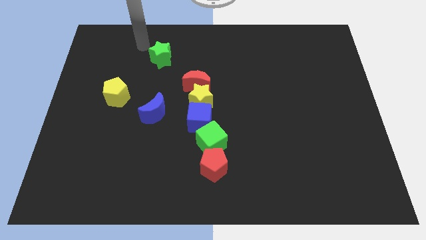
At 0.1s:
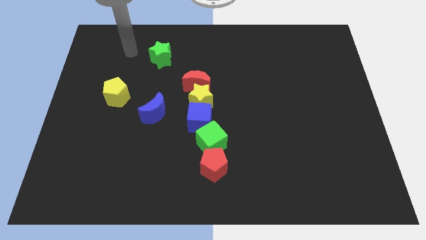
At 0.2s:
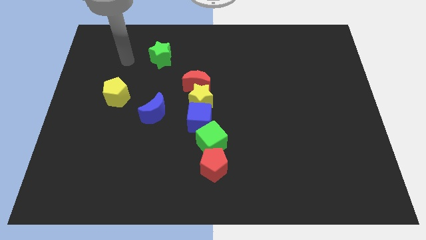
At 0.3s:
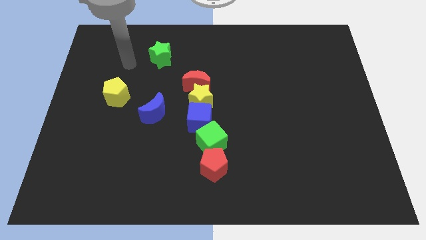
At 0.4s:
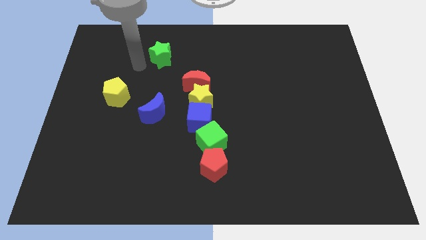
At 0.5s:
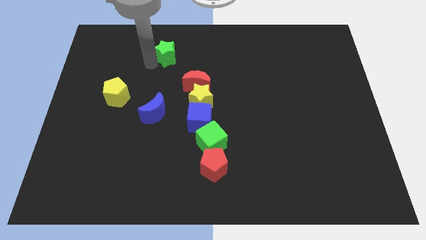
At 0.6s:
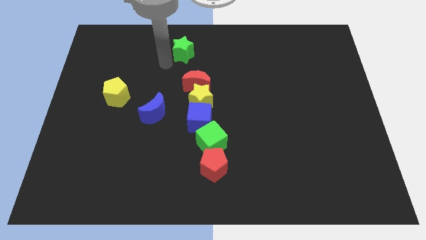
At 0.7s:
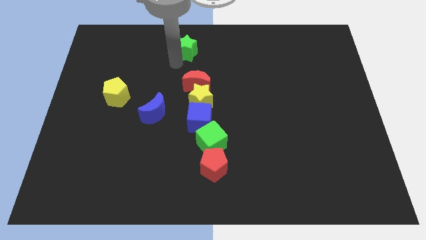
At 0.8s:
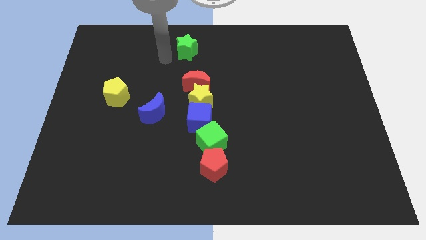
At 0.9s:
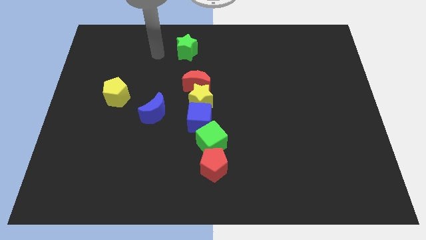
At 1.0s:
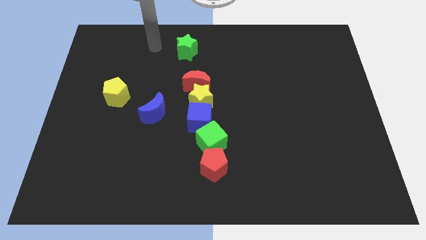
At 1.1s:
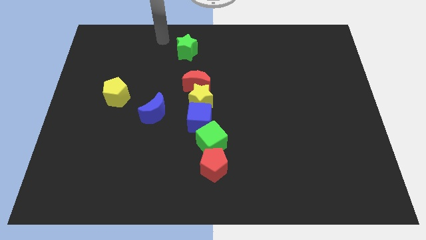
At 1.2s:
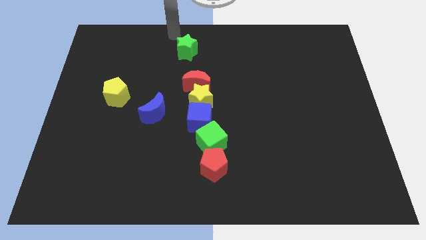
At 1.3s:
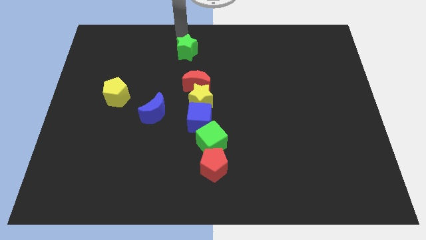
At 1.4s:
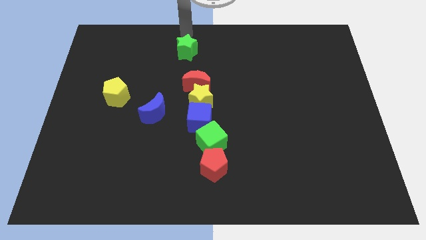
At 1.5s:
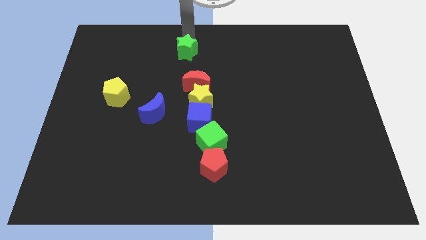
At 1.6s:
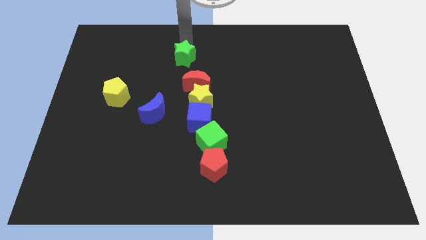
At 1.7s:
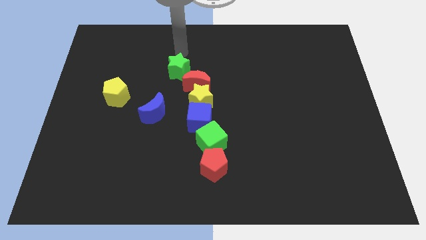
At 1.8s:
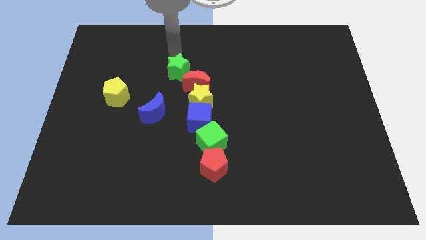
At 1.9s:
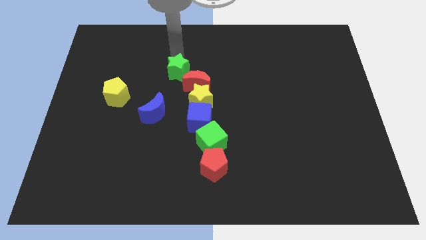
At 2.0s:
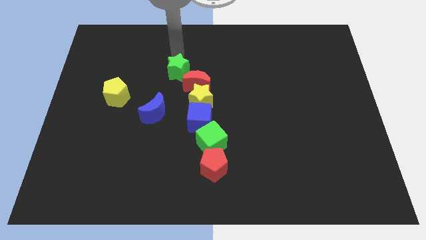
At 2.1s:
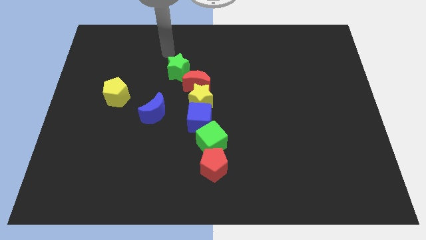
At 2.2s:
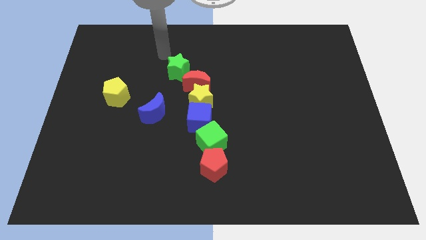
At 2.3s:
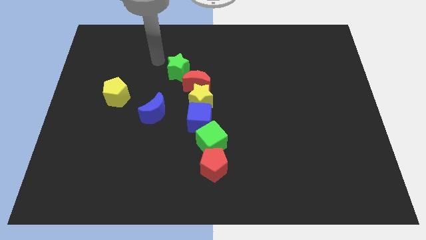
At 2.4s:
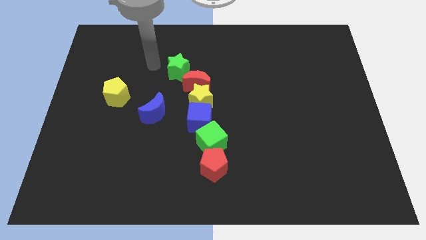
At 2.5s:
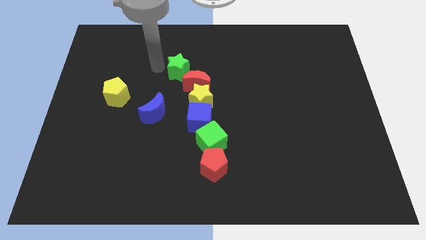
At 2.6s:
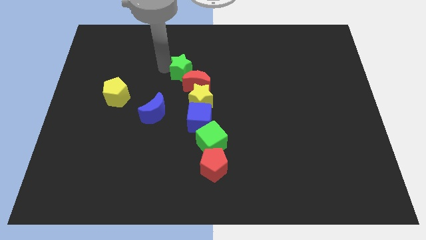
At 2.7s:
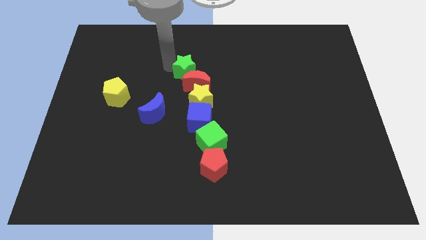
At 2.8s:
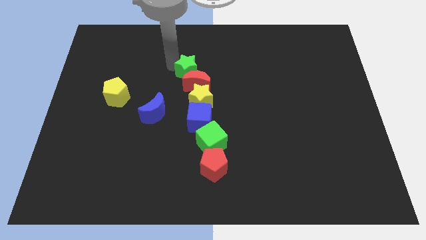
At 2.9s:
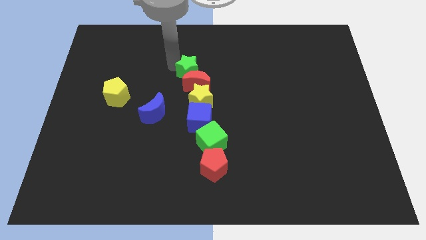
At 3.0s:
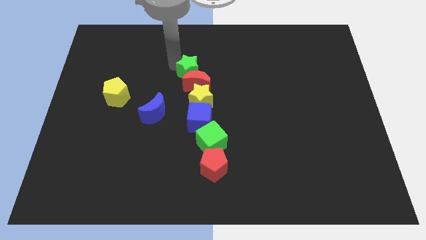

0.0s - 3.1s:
place the green star diagonally to yellow pentagon

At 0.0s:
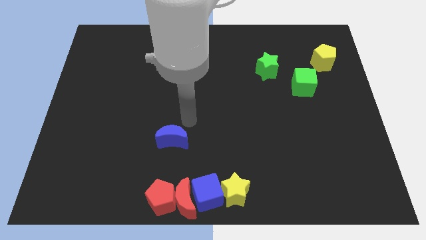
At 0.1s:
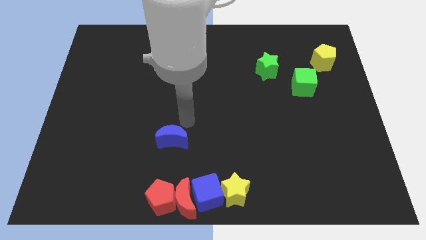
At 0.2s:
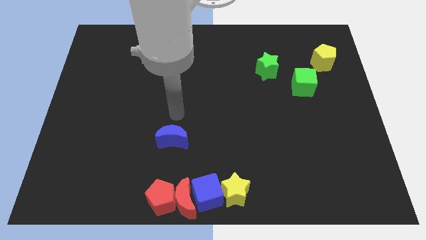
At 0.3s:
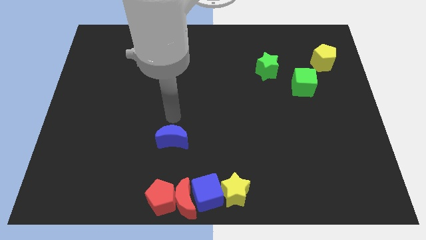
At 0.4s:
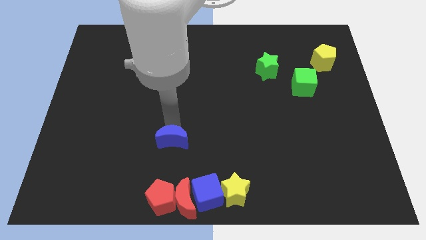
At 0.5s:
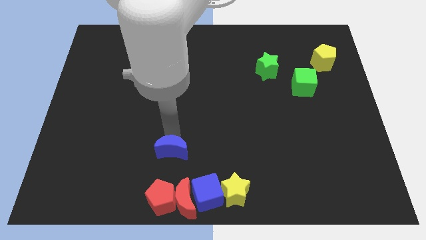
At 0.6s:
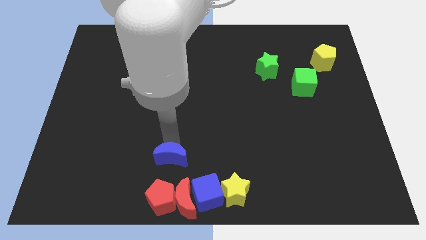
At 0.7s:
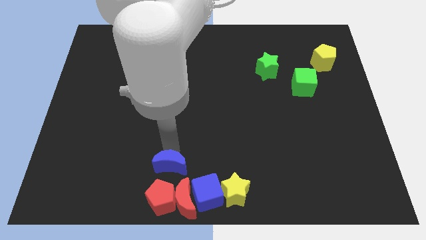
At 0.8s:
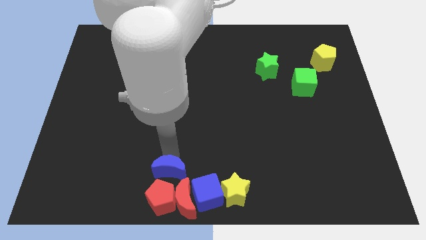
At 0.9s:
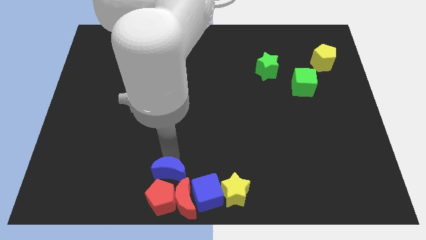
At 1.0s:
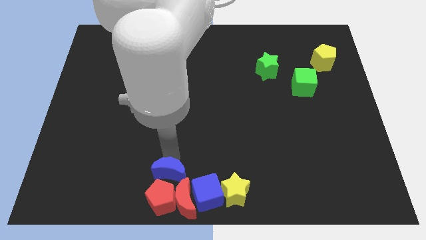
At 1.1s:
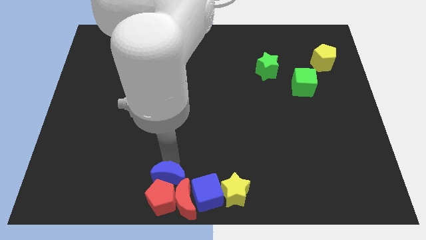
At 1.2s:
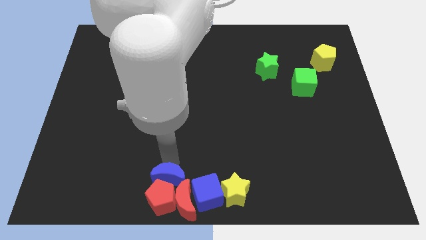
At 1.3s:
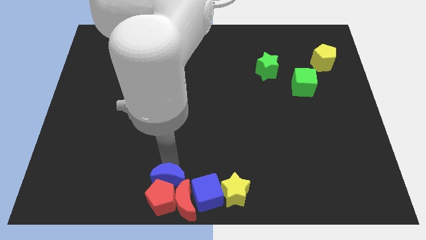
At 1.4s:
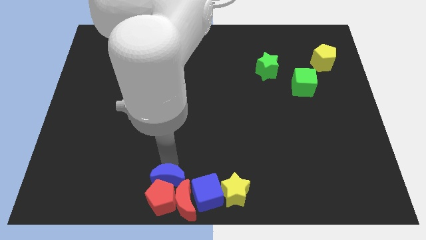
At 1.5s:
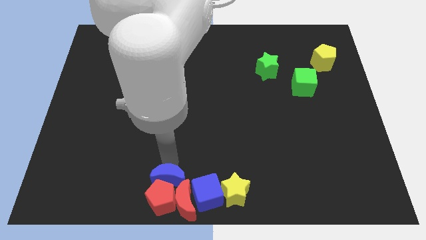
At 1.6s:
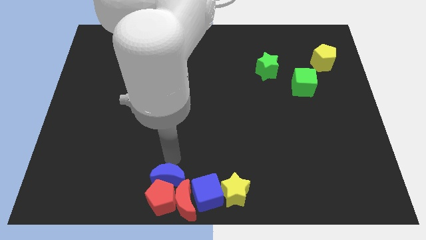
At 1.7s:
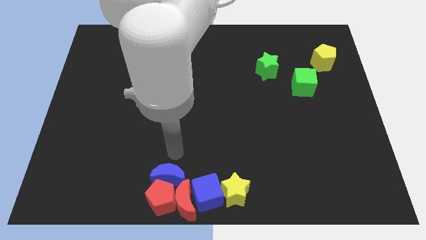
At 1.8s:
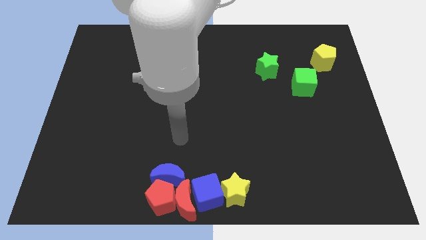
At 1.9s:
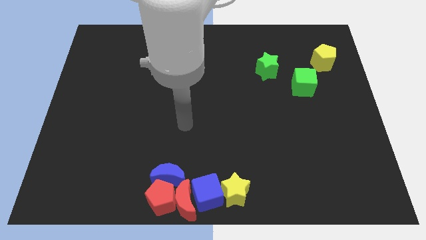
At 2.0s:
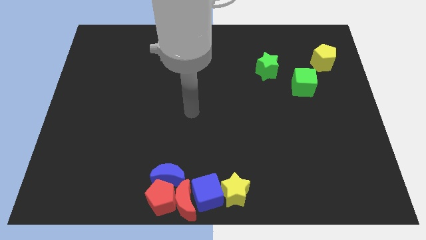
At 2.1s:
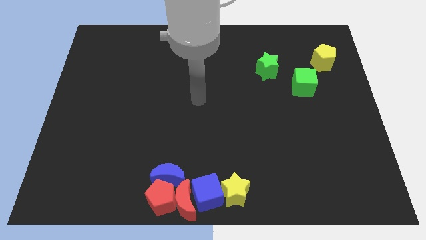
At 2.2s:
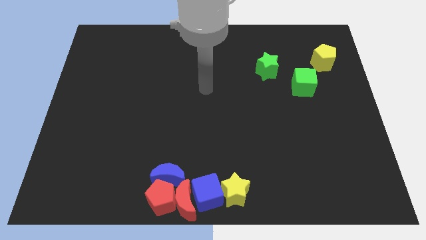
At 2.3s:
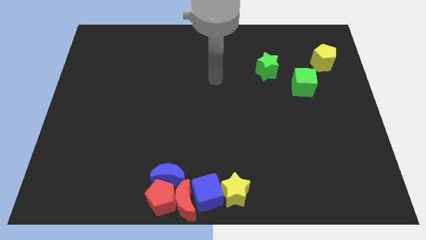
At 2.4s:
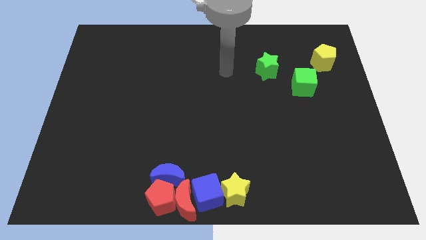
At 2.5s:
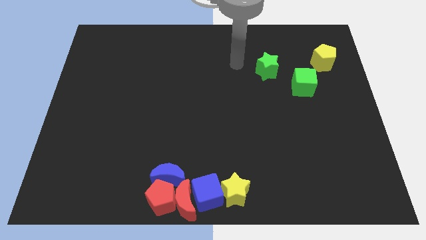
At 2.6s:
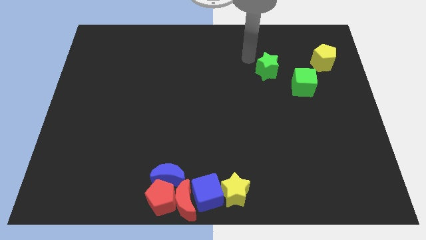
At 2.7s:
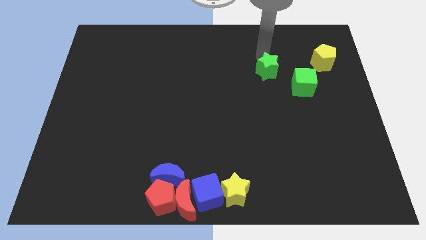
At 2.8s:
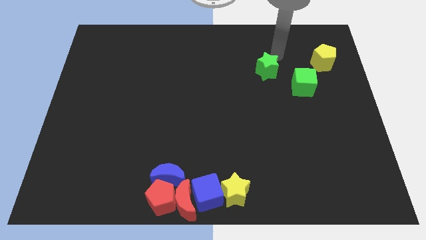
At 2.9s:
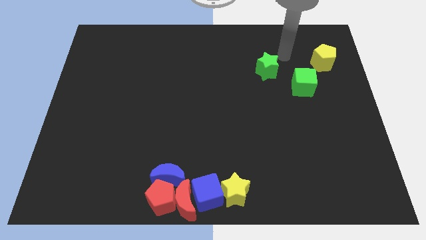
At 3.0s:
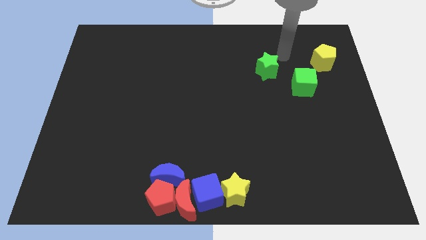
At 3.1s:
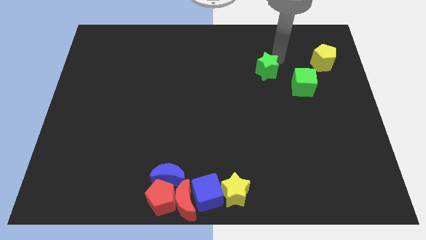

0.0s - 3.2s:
place the blue crescent into the red pentagon

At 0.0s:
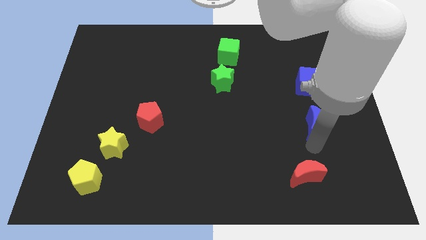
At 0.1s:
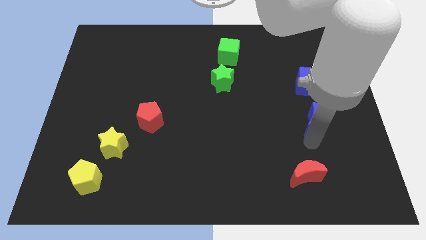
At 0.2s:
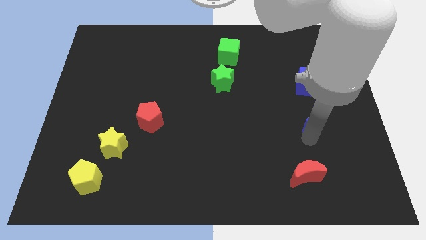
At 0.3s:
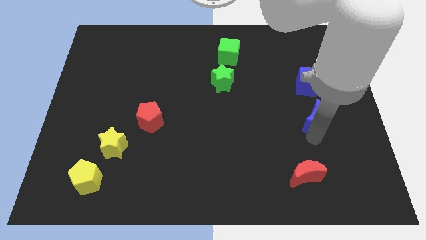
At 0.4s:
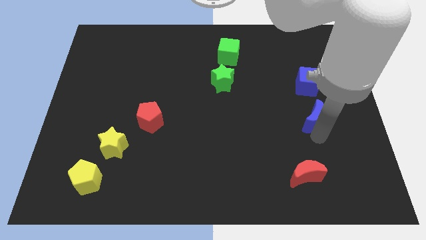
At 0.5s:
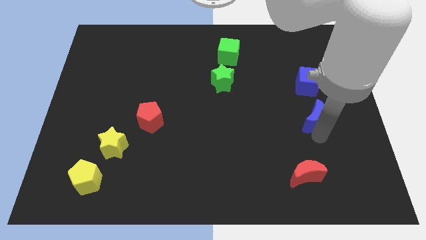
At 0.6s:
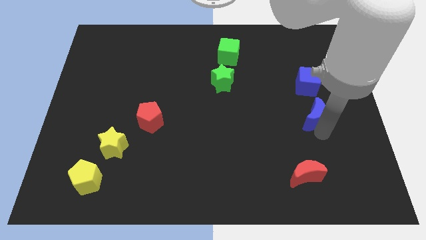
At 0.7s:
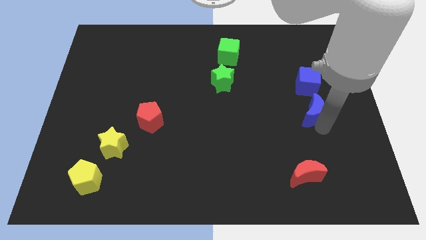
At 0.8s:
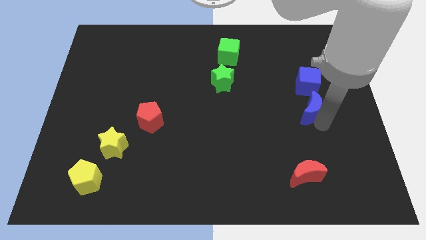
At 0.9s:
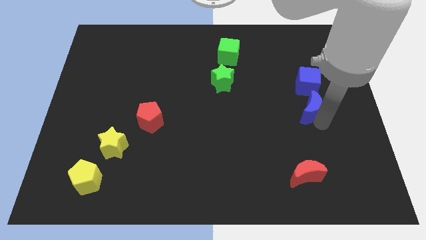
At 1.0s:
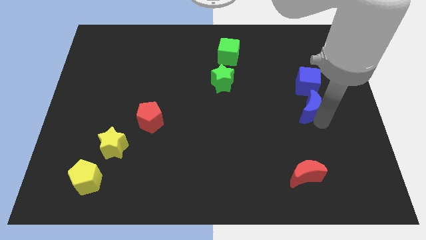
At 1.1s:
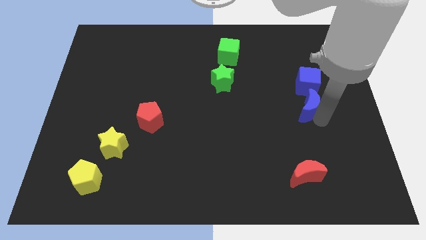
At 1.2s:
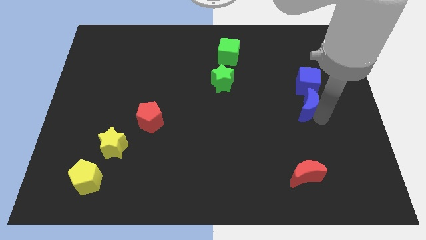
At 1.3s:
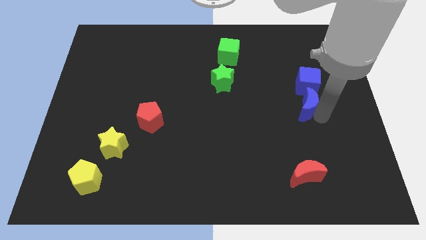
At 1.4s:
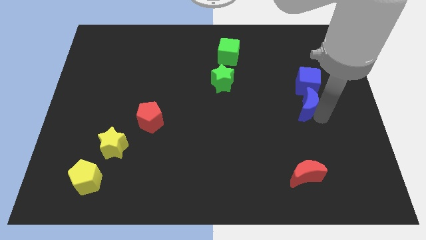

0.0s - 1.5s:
make the blue crescent to touch the bottom side of the blue cube

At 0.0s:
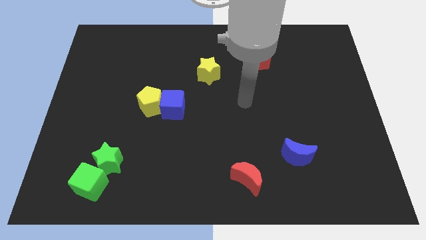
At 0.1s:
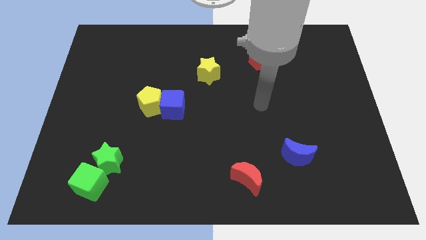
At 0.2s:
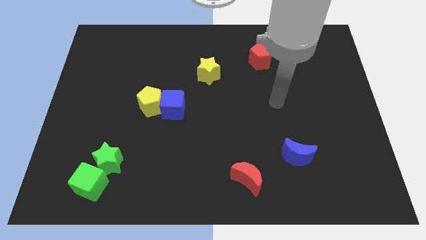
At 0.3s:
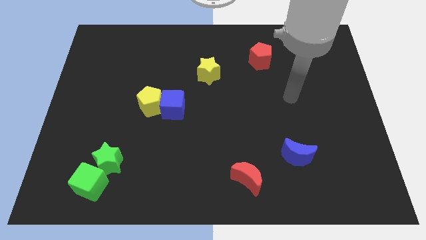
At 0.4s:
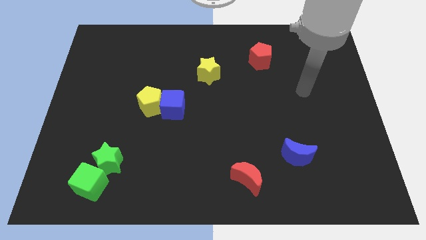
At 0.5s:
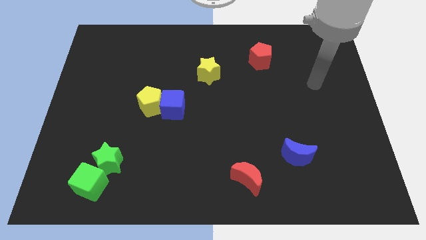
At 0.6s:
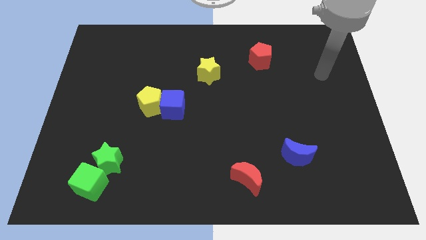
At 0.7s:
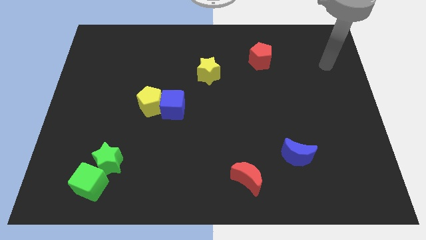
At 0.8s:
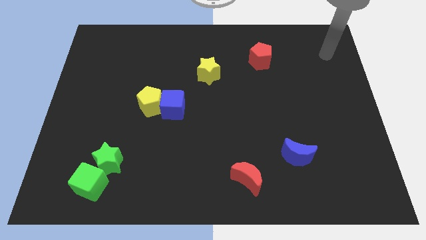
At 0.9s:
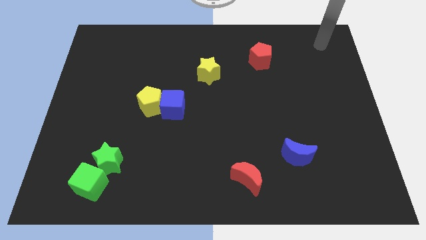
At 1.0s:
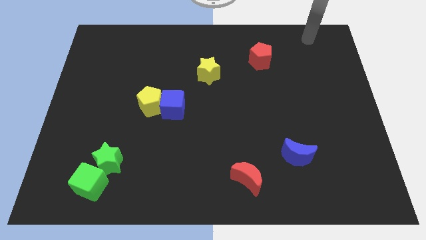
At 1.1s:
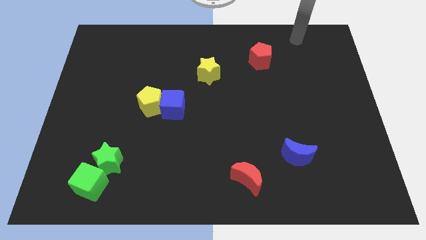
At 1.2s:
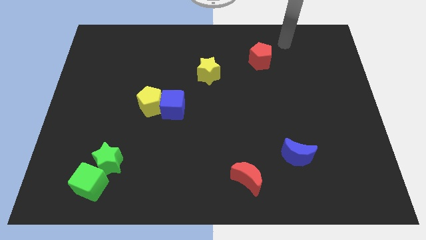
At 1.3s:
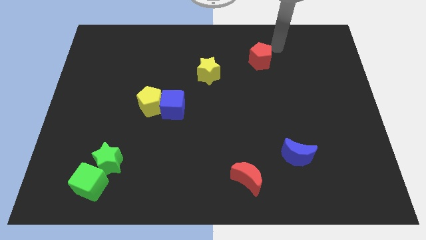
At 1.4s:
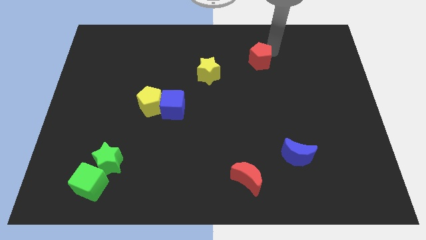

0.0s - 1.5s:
move your arm to the right top of the red pentagon
